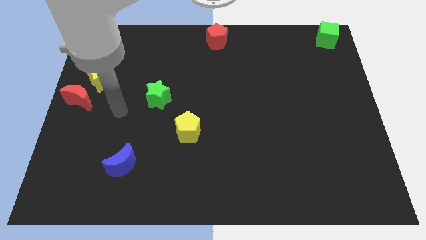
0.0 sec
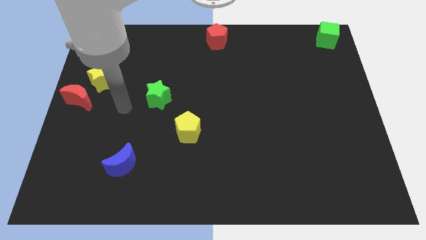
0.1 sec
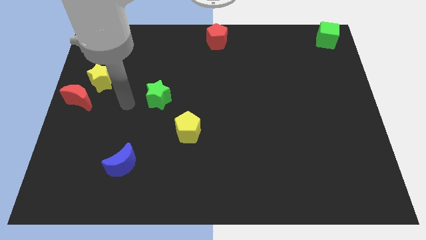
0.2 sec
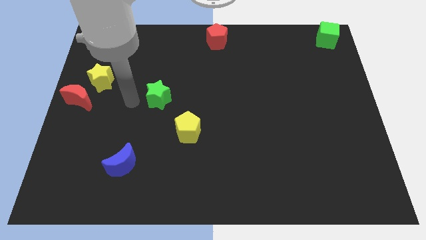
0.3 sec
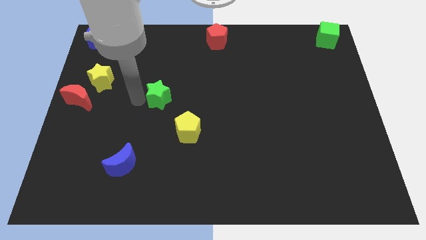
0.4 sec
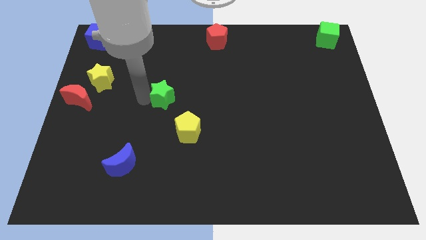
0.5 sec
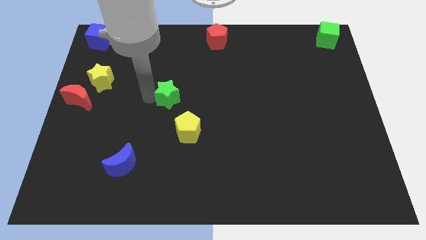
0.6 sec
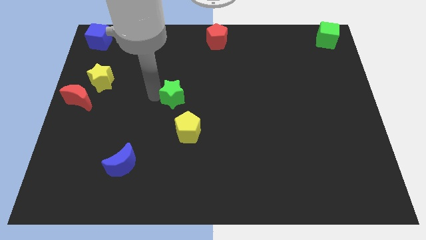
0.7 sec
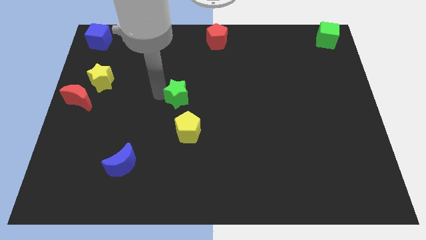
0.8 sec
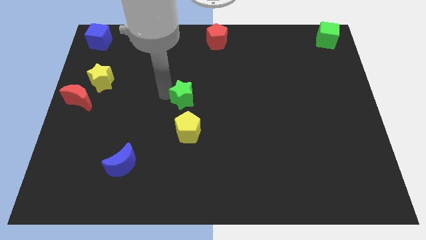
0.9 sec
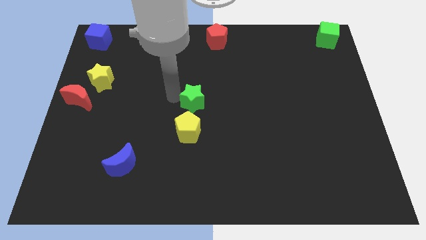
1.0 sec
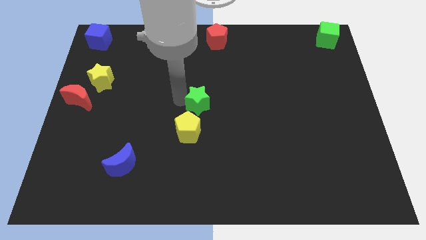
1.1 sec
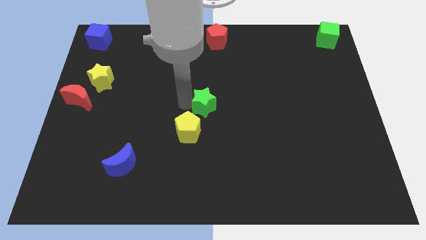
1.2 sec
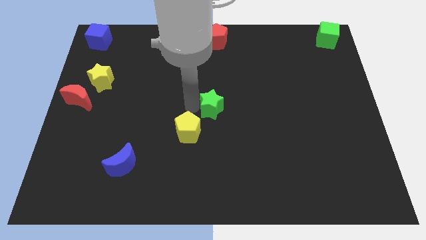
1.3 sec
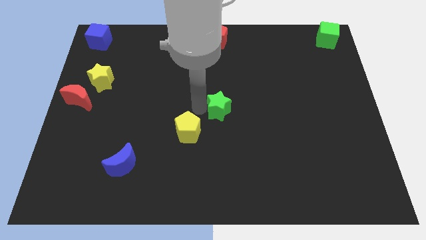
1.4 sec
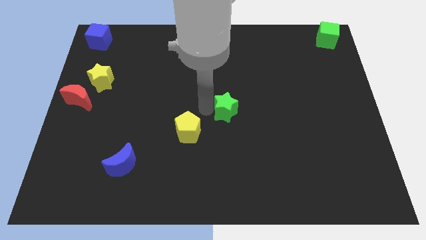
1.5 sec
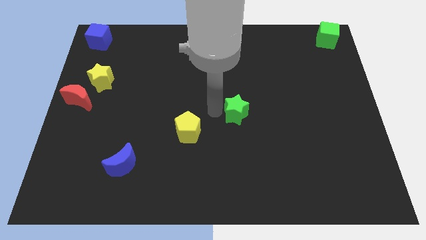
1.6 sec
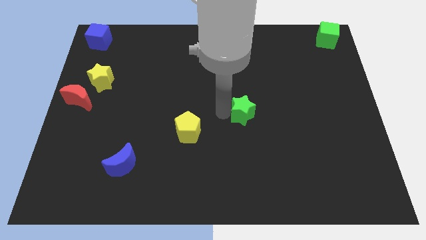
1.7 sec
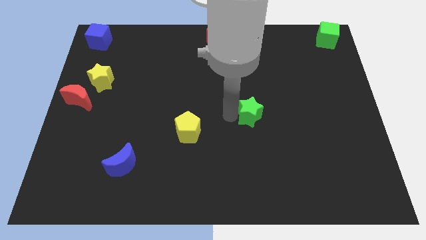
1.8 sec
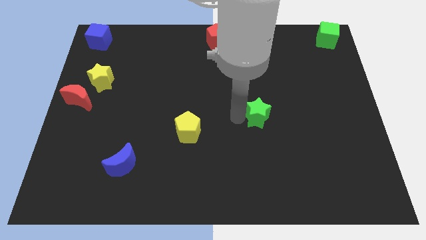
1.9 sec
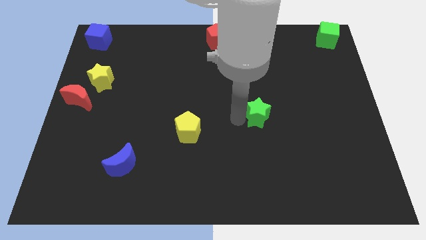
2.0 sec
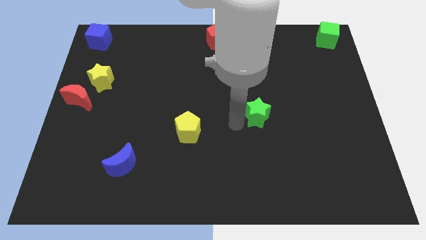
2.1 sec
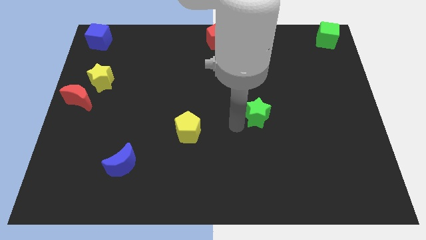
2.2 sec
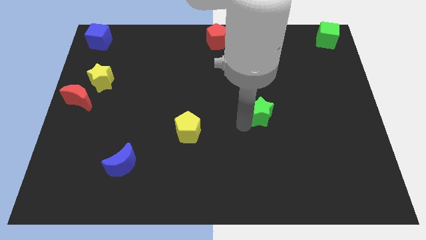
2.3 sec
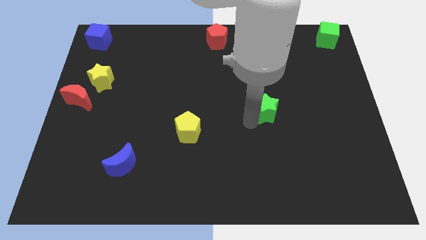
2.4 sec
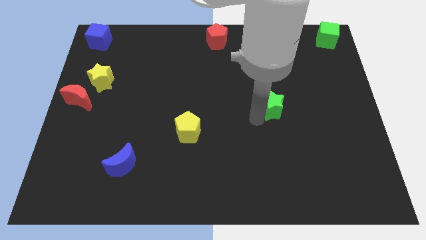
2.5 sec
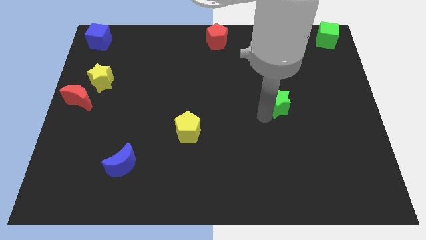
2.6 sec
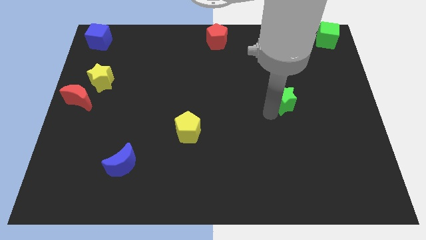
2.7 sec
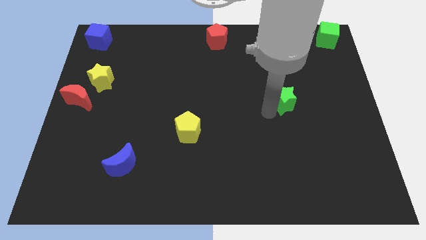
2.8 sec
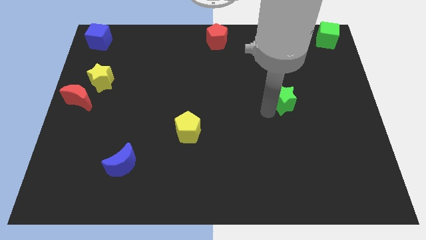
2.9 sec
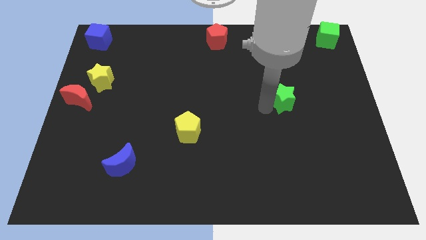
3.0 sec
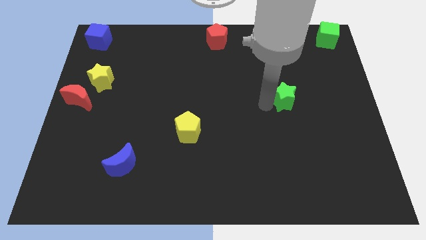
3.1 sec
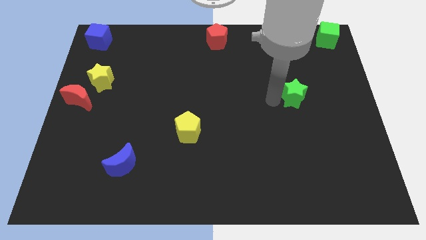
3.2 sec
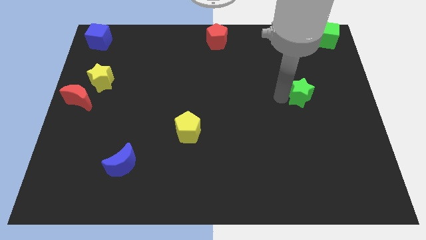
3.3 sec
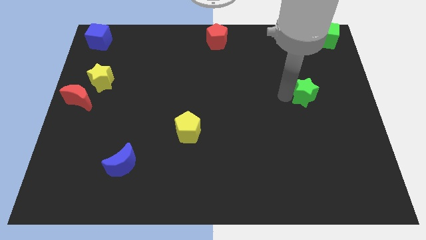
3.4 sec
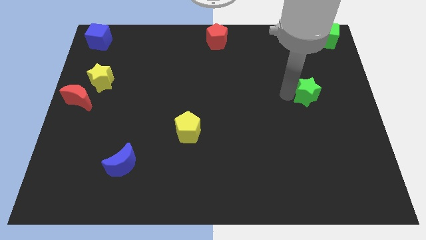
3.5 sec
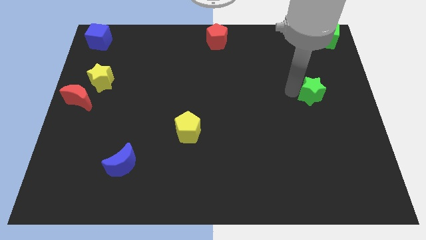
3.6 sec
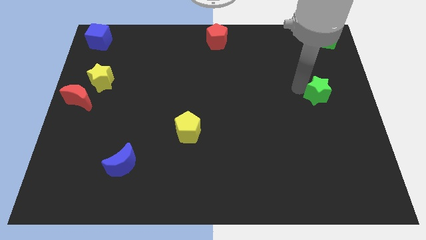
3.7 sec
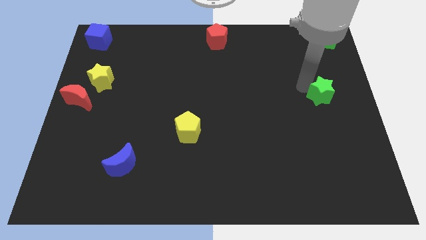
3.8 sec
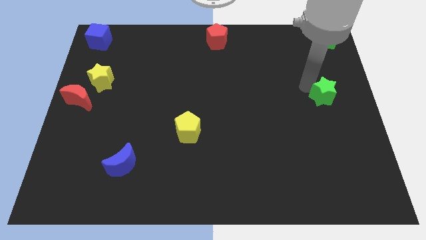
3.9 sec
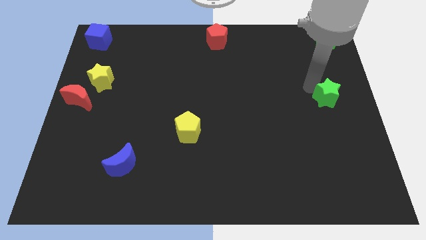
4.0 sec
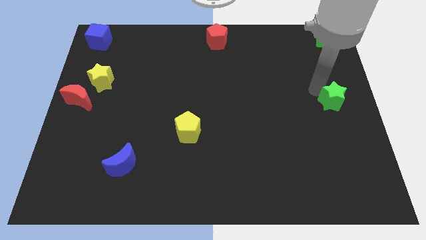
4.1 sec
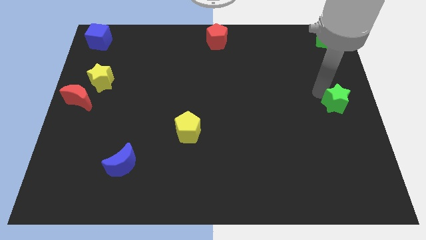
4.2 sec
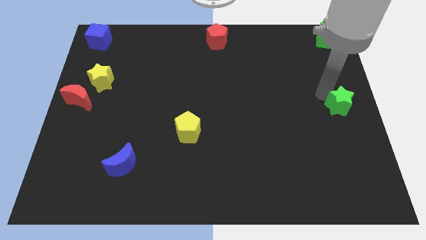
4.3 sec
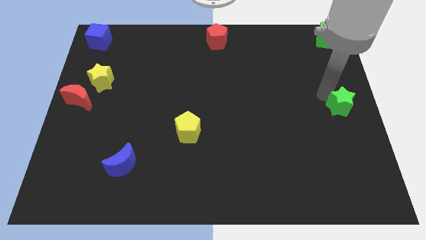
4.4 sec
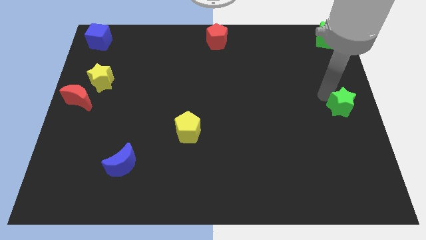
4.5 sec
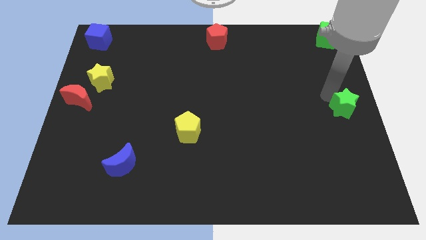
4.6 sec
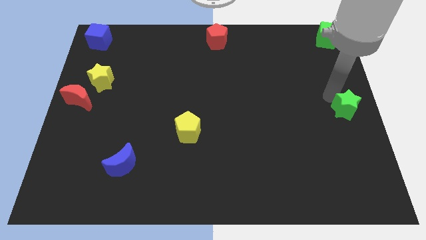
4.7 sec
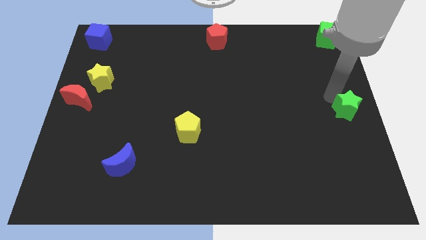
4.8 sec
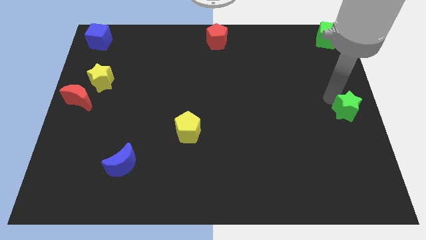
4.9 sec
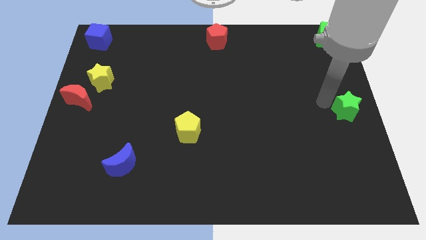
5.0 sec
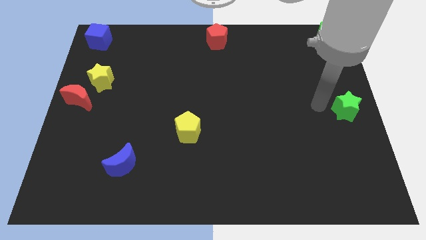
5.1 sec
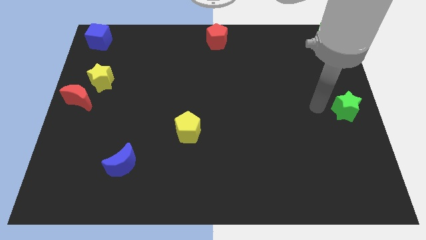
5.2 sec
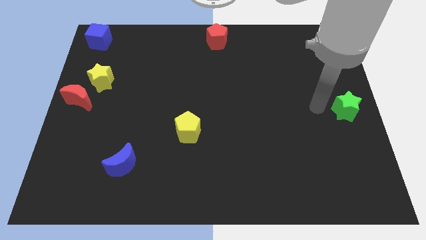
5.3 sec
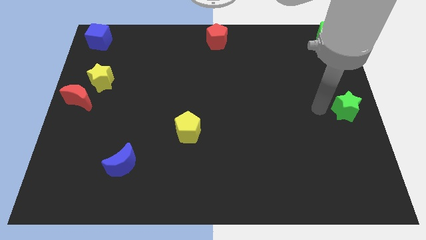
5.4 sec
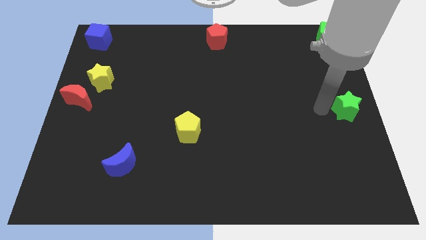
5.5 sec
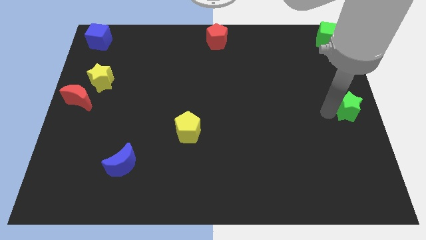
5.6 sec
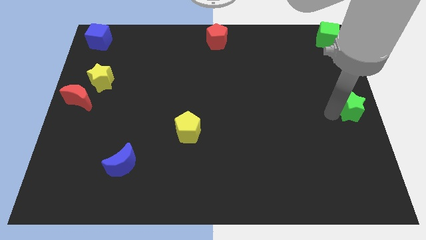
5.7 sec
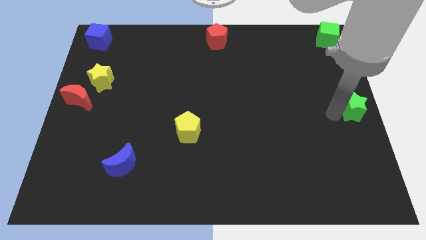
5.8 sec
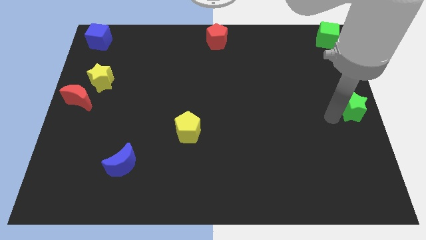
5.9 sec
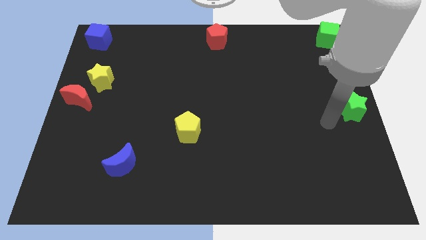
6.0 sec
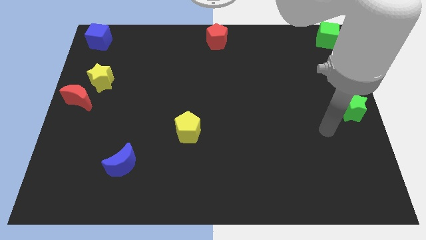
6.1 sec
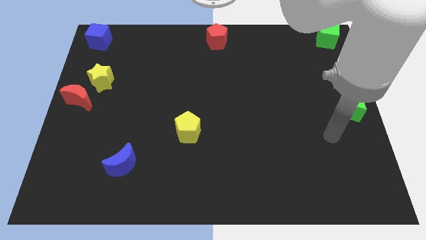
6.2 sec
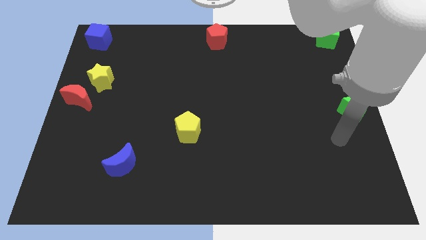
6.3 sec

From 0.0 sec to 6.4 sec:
put the green star at the center right side of the board

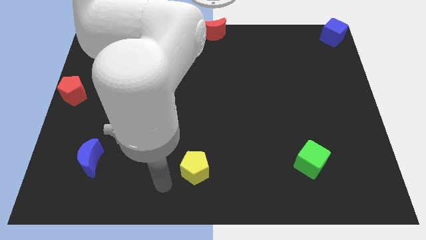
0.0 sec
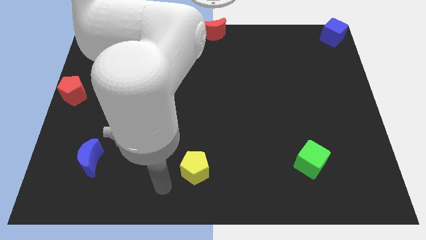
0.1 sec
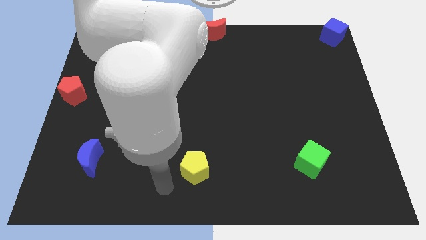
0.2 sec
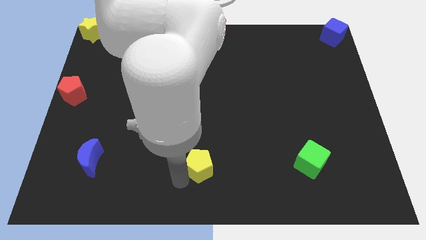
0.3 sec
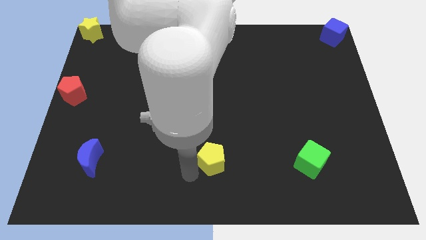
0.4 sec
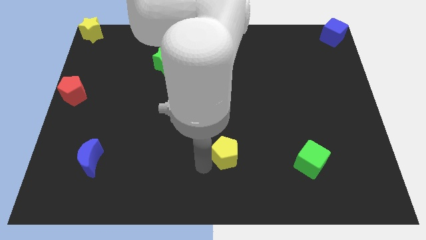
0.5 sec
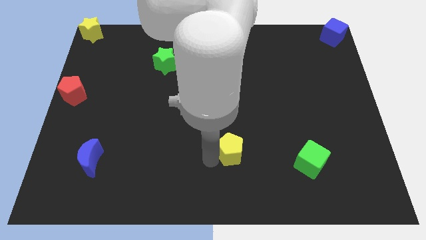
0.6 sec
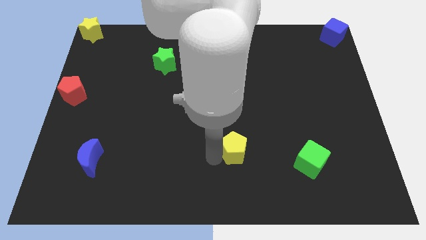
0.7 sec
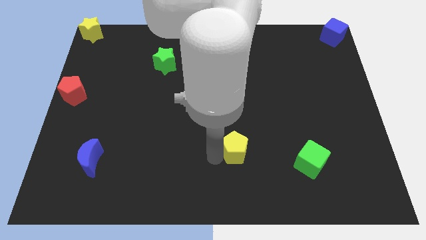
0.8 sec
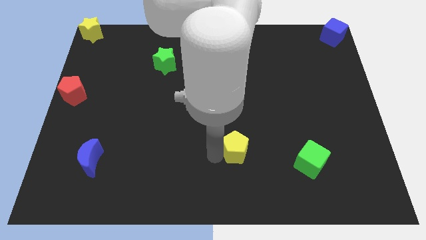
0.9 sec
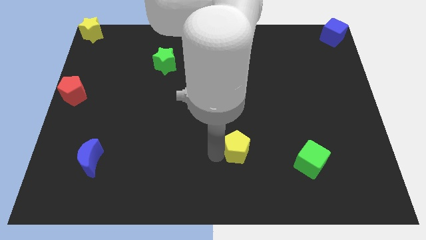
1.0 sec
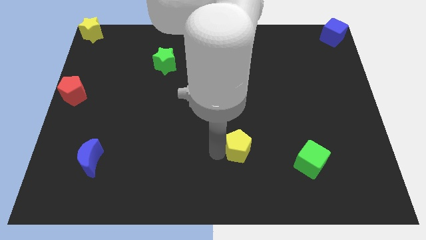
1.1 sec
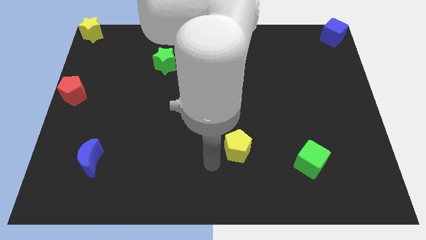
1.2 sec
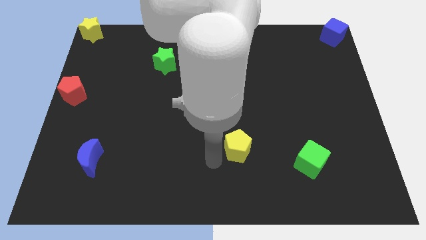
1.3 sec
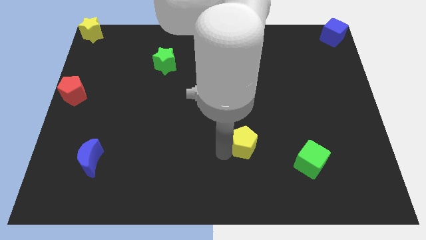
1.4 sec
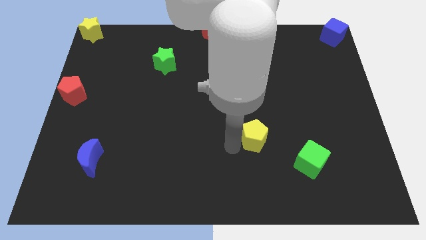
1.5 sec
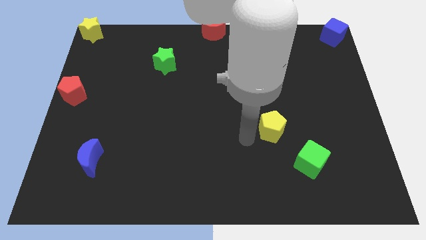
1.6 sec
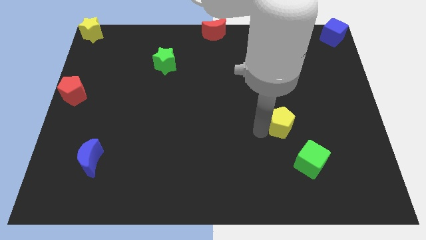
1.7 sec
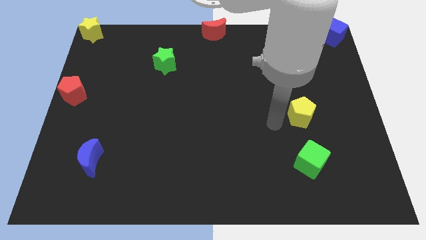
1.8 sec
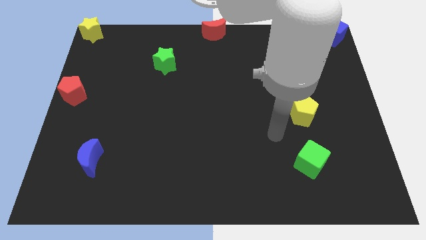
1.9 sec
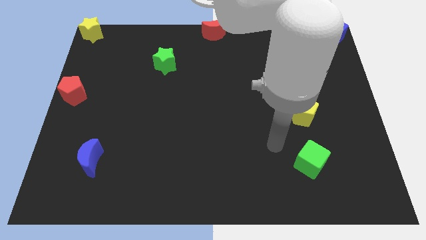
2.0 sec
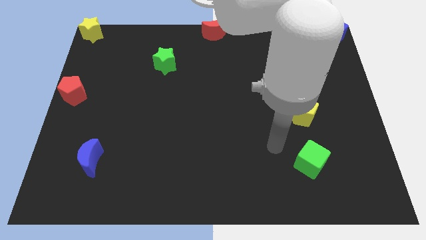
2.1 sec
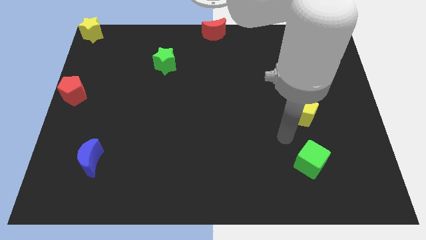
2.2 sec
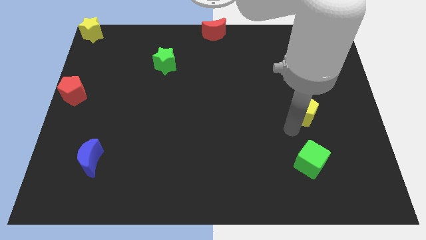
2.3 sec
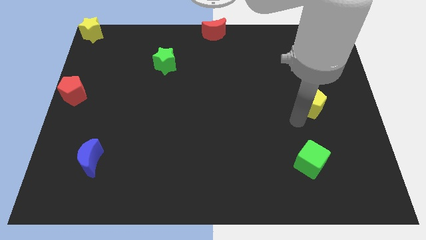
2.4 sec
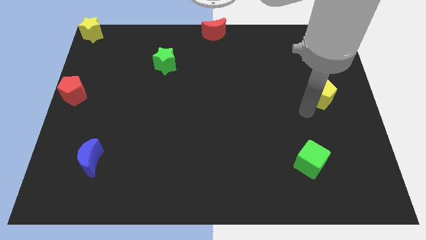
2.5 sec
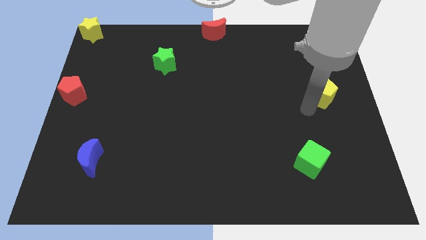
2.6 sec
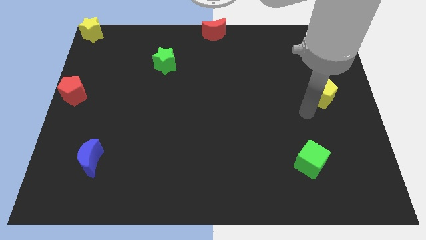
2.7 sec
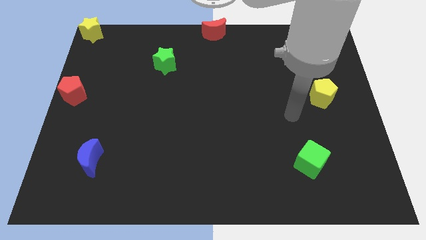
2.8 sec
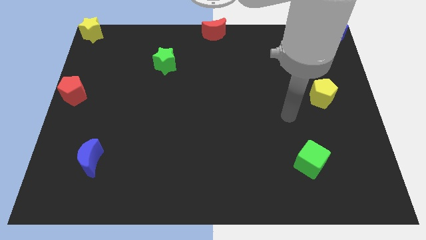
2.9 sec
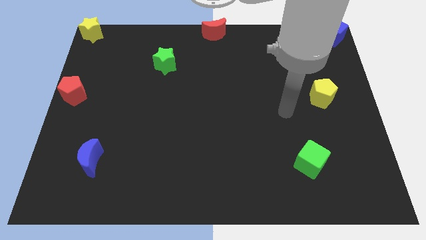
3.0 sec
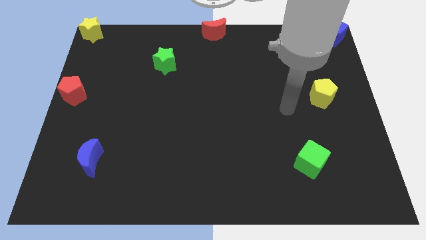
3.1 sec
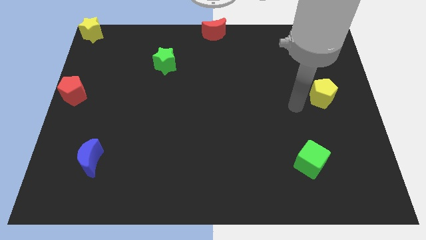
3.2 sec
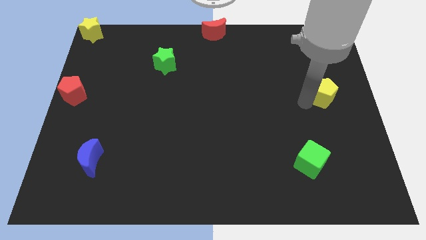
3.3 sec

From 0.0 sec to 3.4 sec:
move the yellow pentagon between green and blue cube
